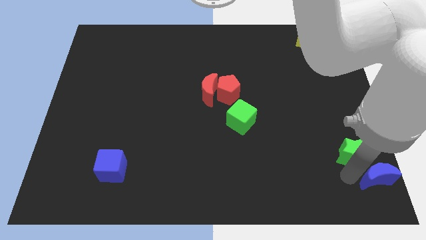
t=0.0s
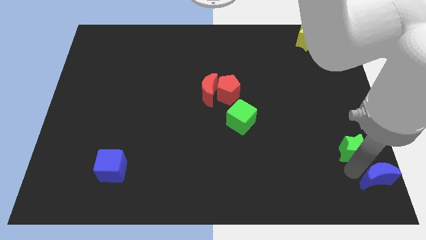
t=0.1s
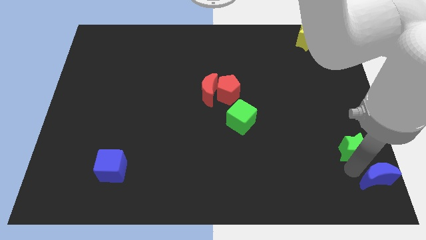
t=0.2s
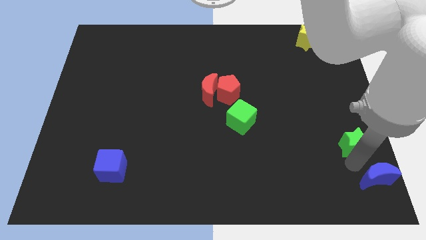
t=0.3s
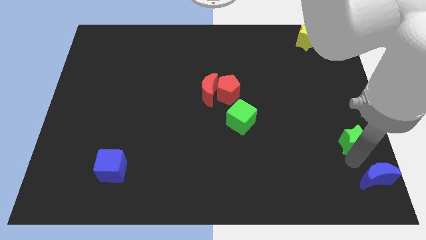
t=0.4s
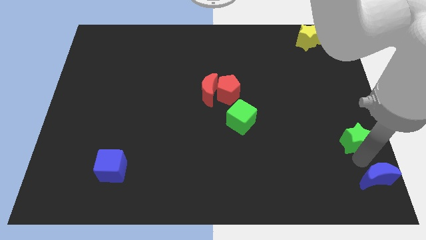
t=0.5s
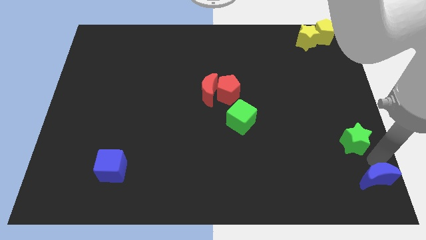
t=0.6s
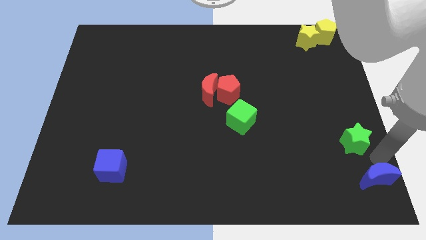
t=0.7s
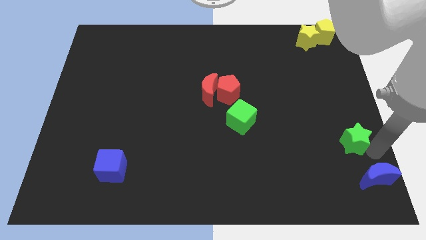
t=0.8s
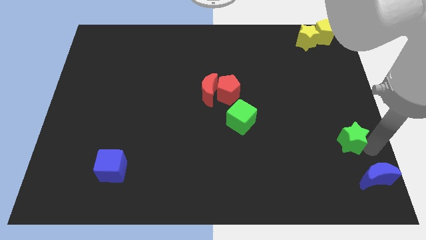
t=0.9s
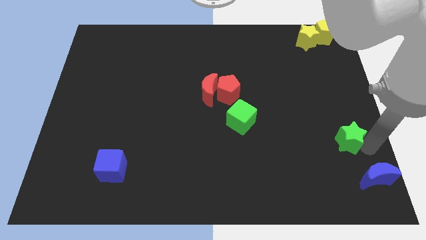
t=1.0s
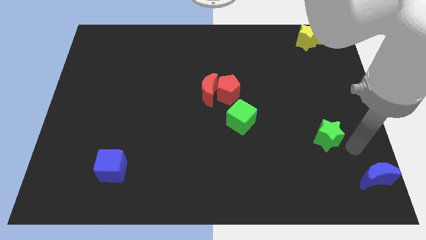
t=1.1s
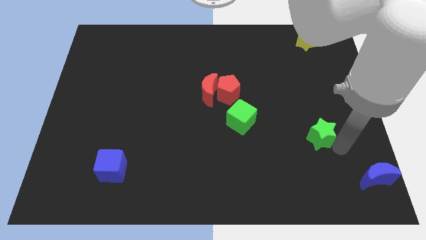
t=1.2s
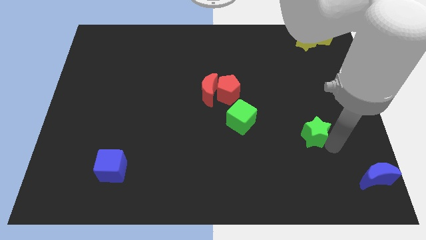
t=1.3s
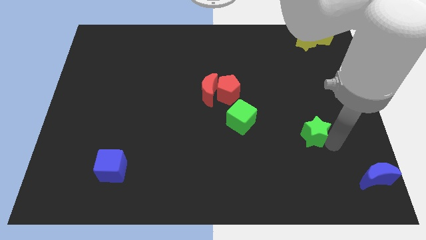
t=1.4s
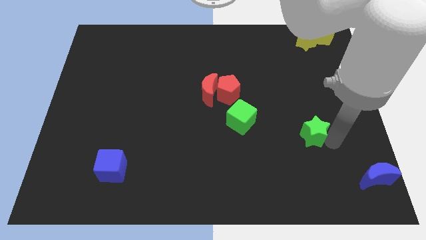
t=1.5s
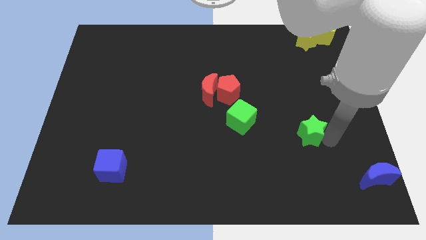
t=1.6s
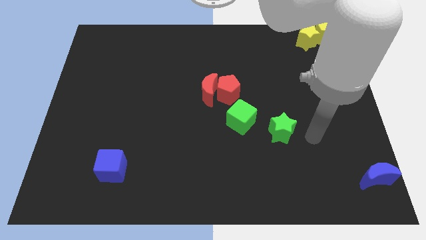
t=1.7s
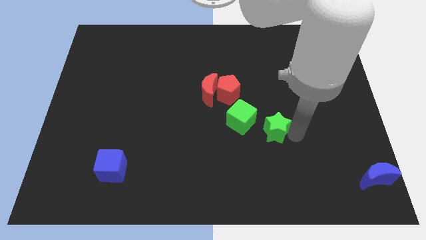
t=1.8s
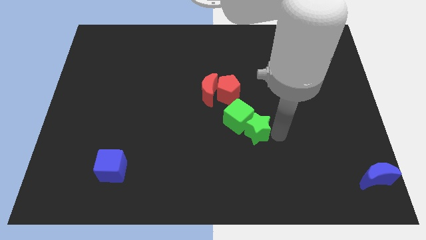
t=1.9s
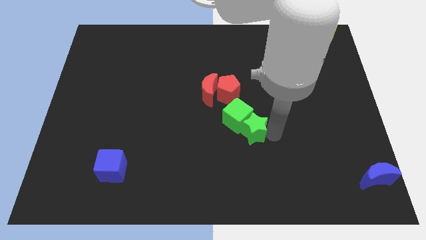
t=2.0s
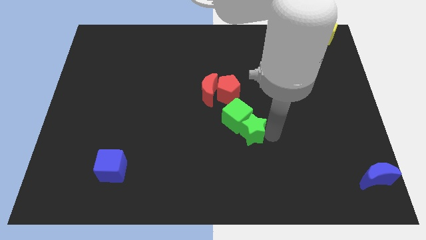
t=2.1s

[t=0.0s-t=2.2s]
move the green star into the green cube diagonally

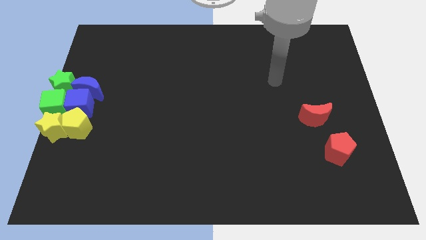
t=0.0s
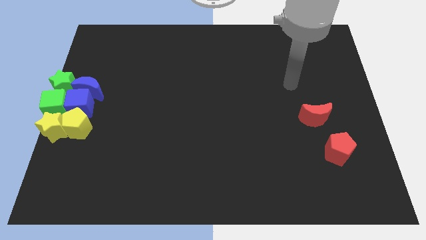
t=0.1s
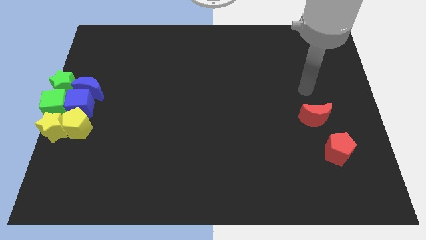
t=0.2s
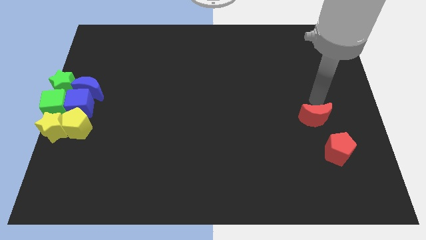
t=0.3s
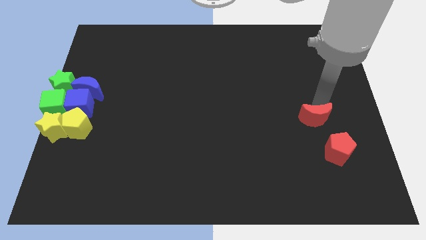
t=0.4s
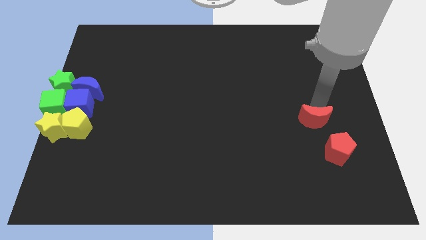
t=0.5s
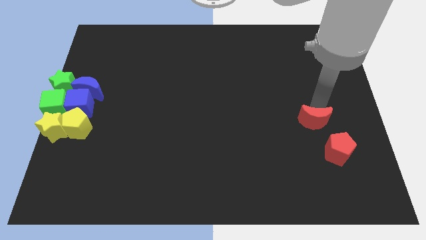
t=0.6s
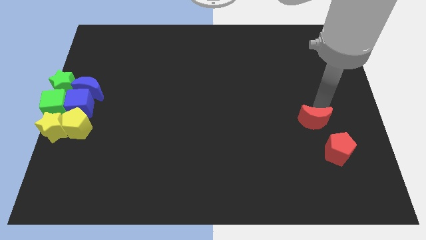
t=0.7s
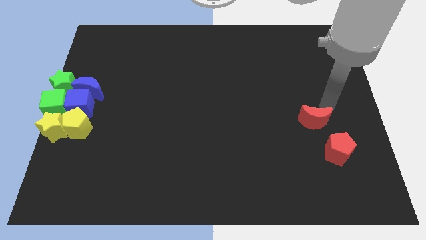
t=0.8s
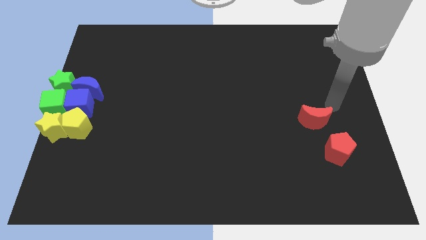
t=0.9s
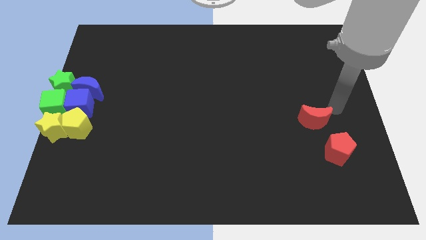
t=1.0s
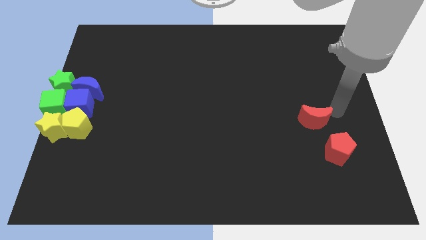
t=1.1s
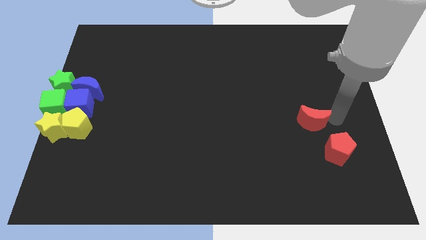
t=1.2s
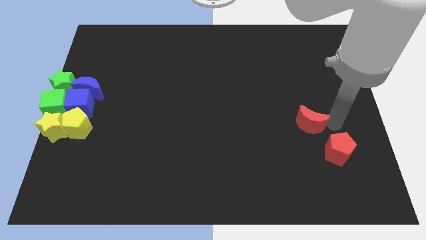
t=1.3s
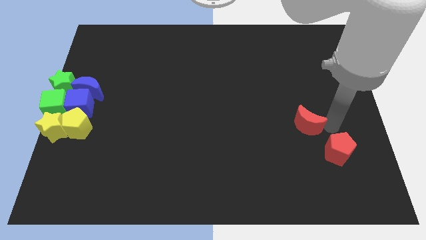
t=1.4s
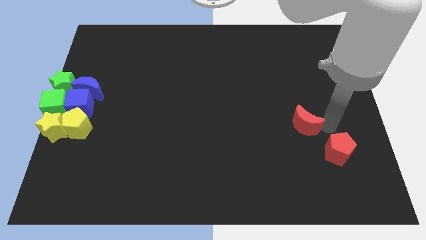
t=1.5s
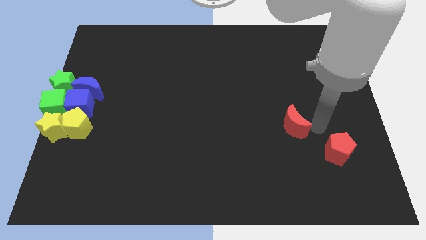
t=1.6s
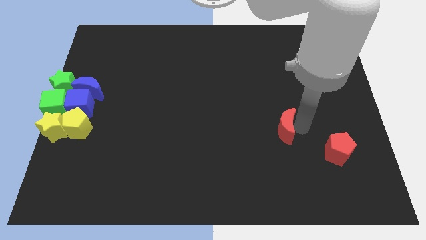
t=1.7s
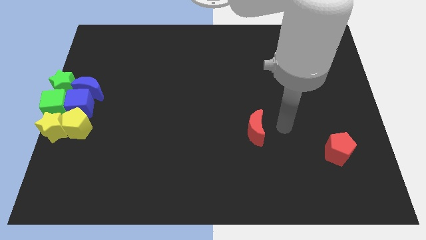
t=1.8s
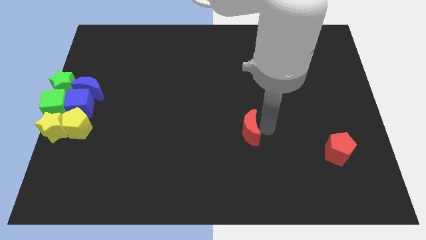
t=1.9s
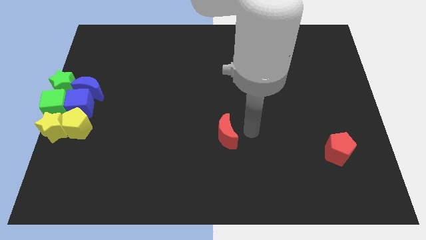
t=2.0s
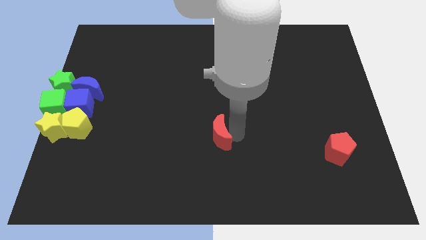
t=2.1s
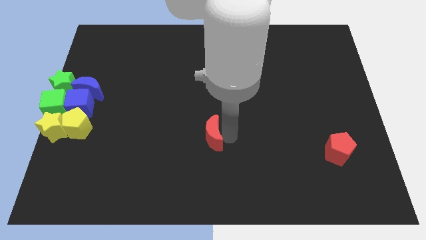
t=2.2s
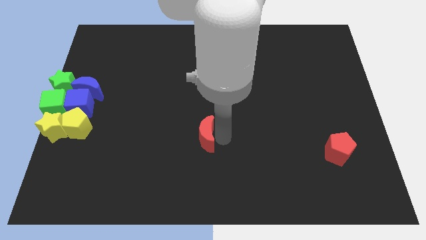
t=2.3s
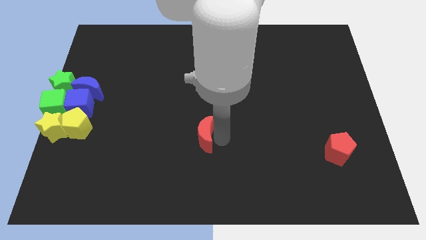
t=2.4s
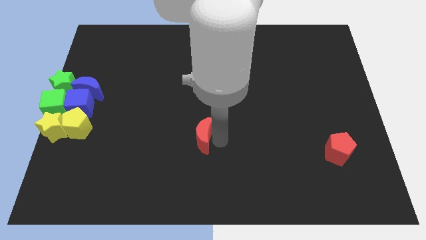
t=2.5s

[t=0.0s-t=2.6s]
move the red moon towards the center of the board

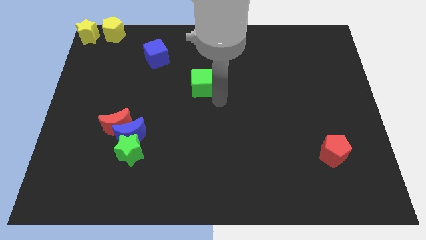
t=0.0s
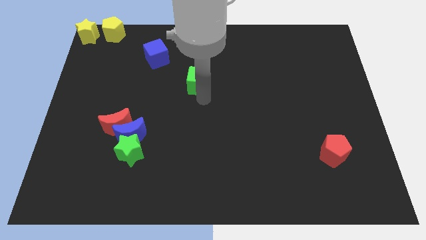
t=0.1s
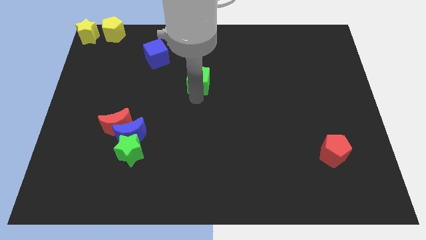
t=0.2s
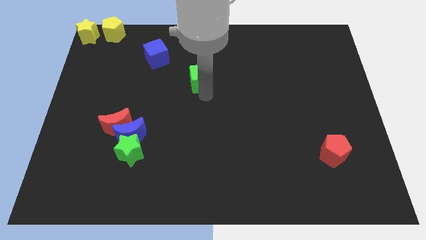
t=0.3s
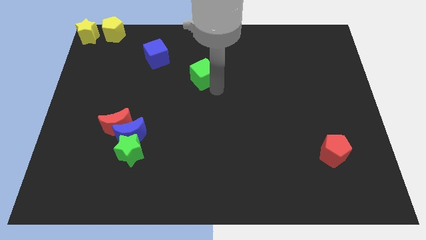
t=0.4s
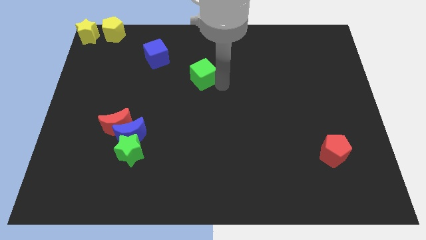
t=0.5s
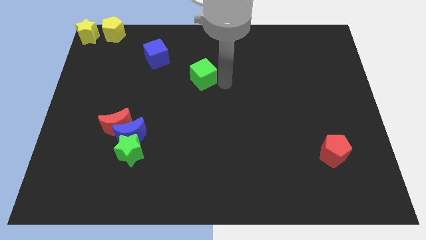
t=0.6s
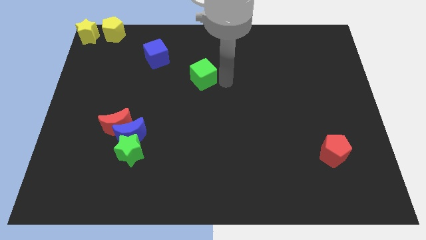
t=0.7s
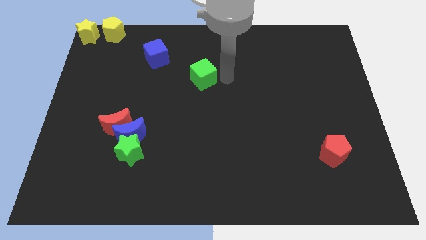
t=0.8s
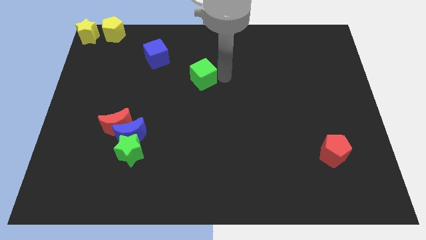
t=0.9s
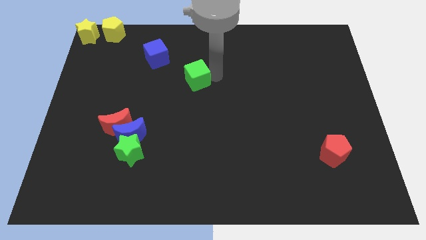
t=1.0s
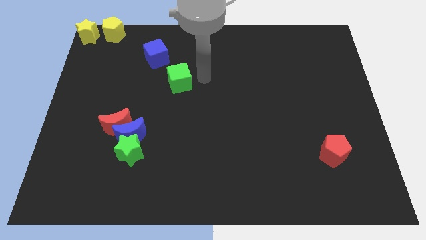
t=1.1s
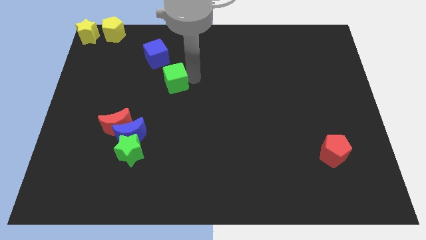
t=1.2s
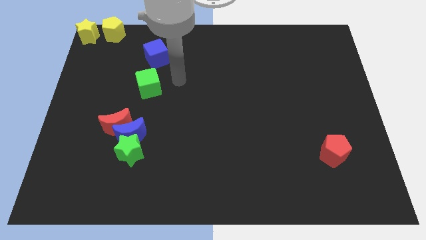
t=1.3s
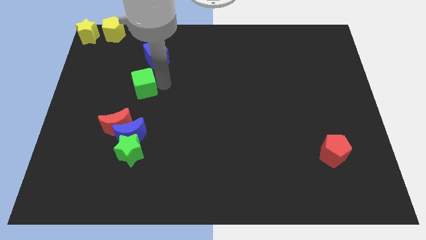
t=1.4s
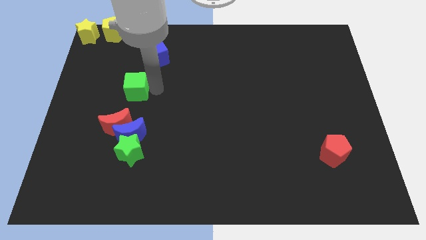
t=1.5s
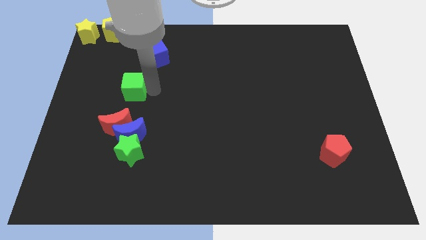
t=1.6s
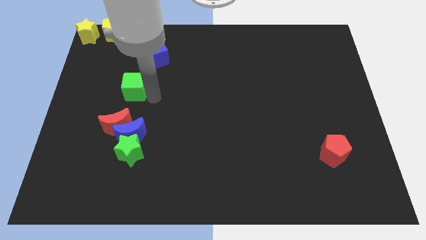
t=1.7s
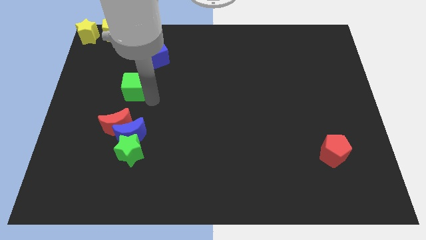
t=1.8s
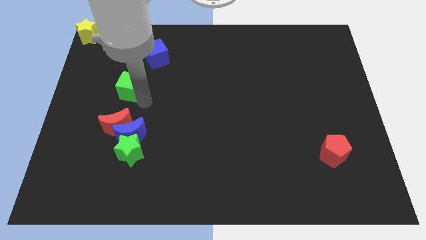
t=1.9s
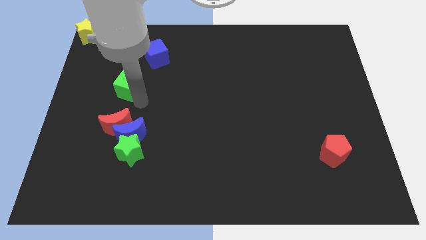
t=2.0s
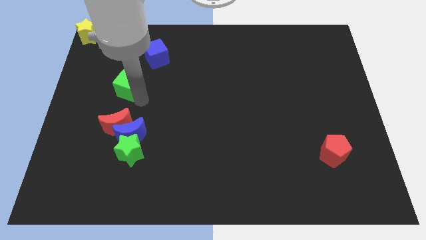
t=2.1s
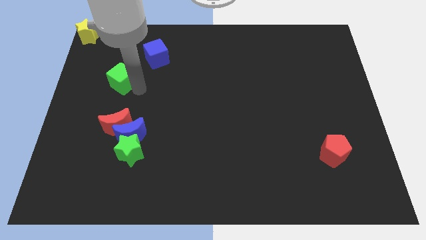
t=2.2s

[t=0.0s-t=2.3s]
place the green cube vertically above the red moon

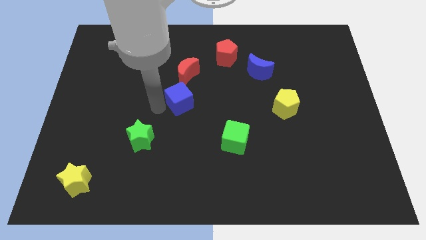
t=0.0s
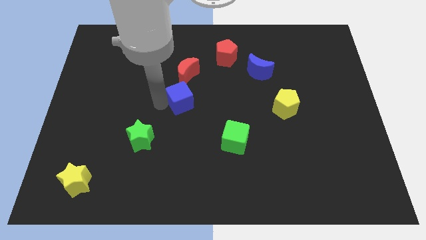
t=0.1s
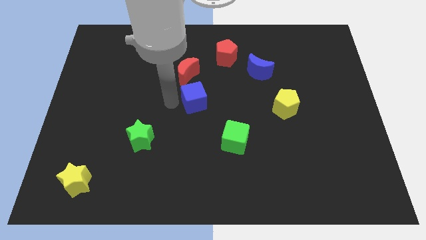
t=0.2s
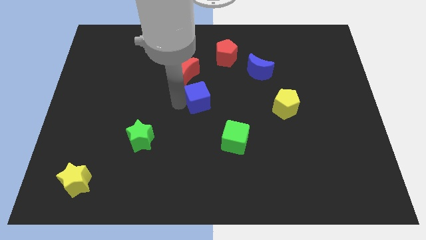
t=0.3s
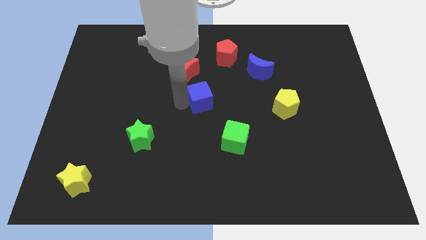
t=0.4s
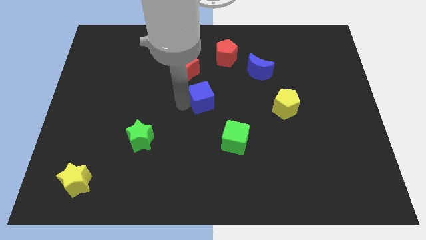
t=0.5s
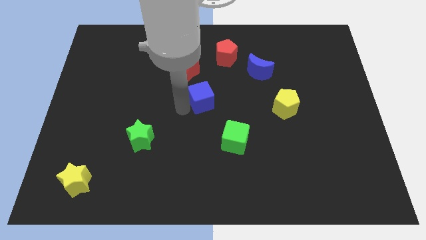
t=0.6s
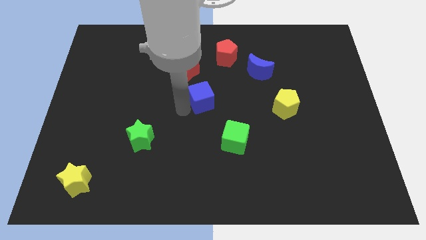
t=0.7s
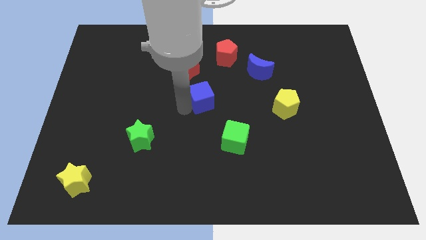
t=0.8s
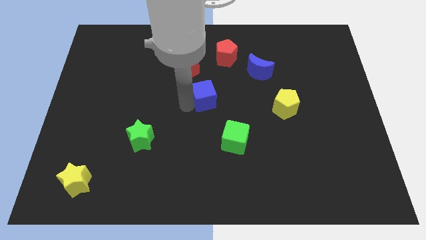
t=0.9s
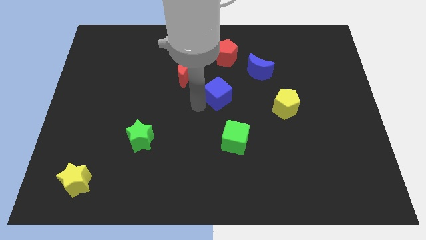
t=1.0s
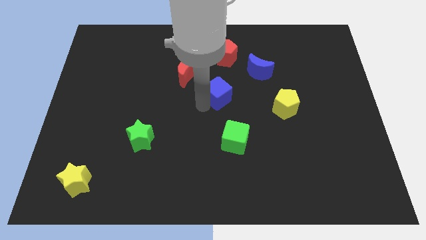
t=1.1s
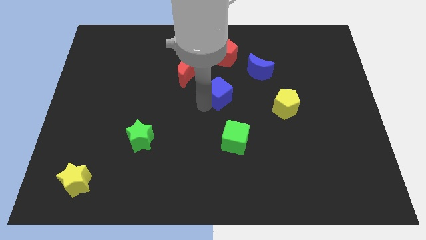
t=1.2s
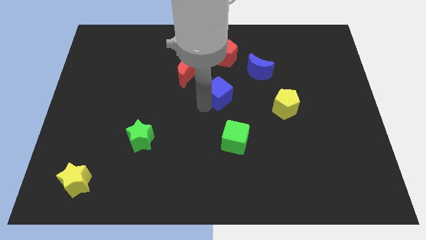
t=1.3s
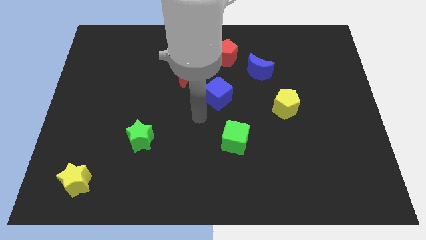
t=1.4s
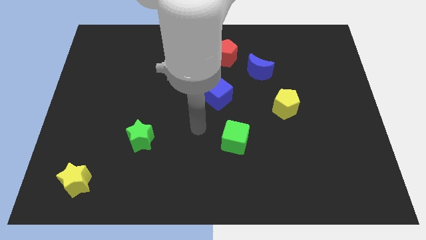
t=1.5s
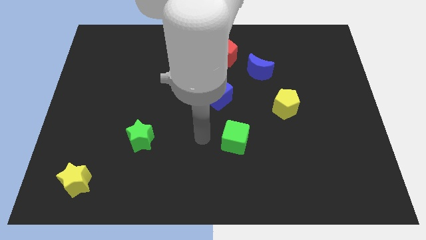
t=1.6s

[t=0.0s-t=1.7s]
place the blue cube below the red pentagon

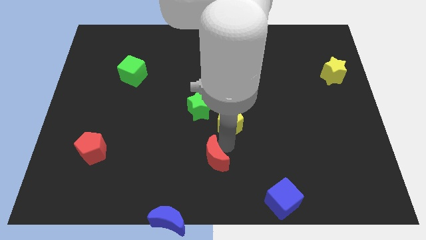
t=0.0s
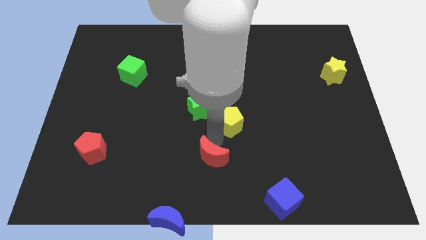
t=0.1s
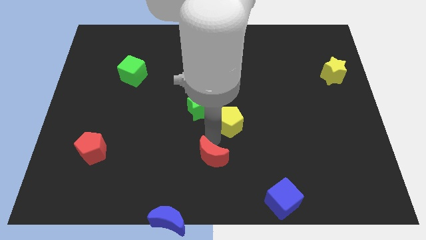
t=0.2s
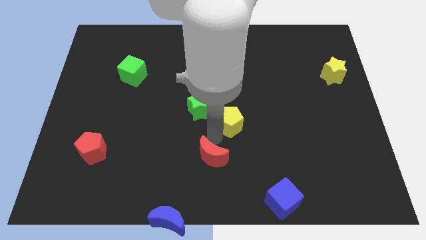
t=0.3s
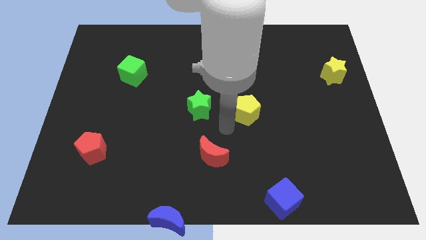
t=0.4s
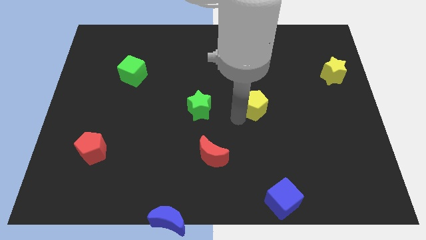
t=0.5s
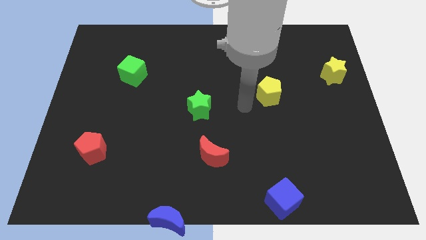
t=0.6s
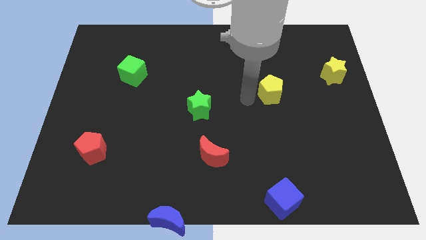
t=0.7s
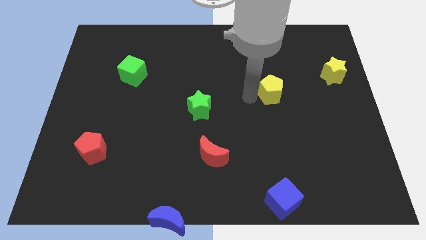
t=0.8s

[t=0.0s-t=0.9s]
place the yellow pentagon in between the yellow star and green star
